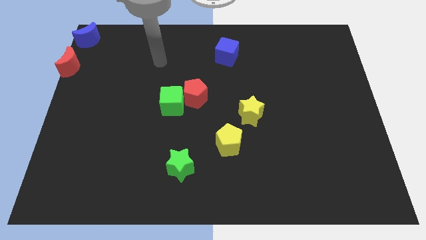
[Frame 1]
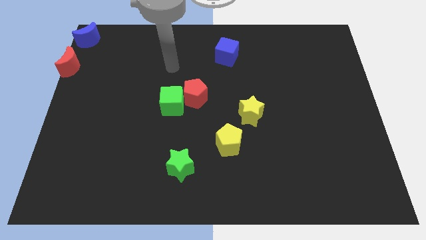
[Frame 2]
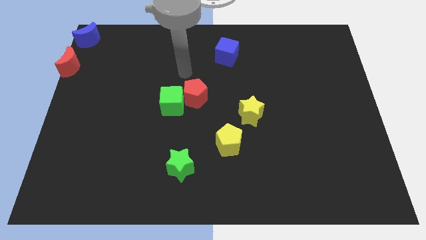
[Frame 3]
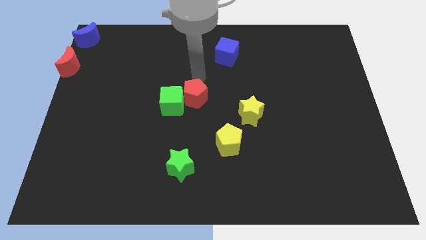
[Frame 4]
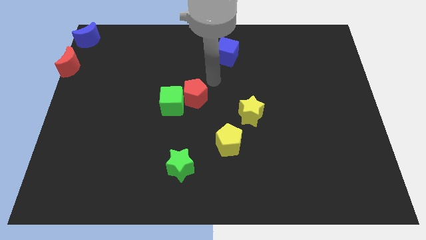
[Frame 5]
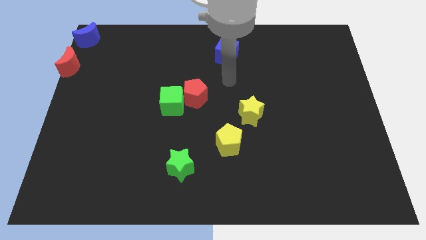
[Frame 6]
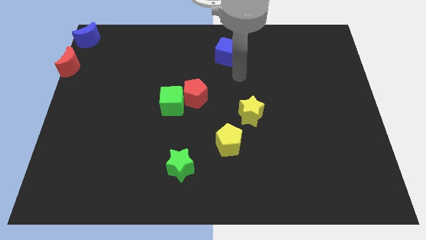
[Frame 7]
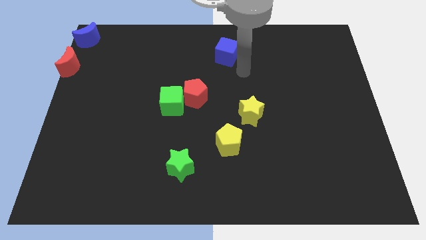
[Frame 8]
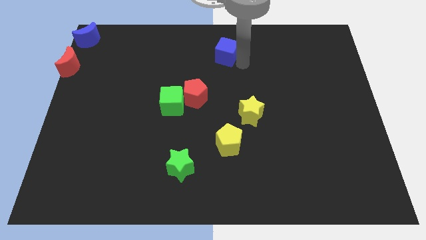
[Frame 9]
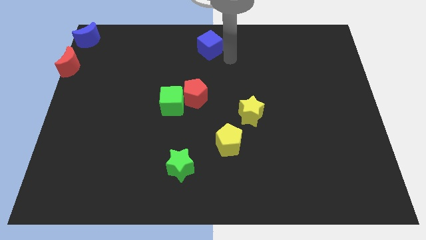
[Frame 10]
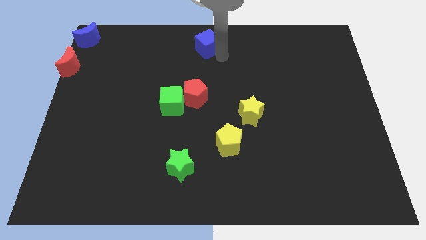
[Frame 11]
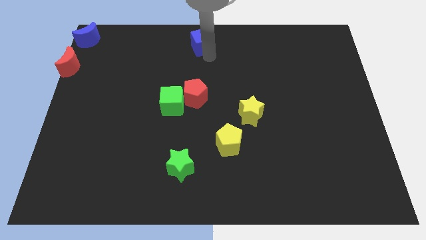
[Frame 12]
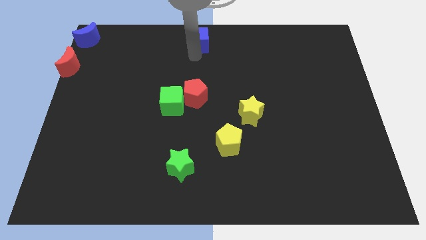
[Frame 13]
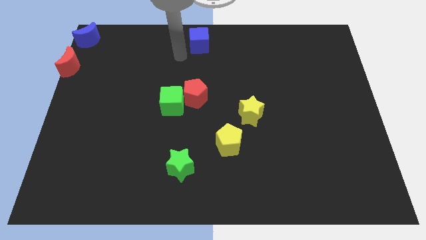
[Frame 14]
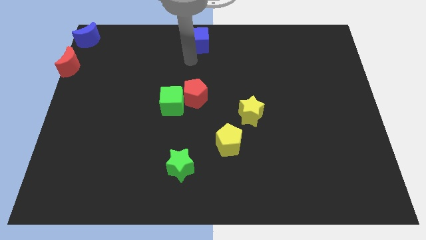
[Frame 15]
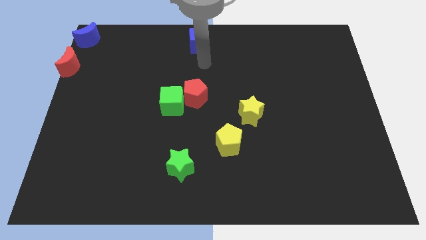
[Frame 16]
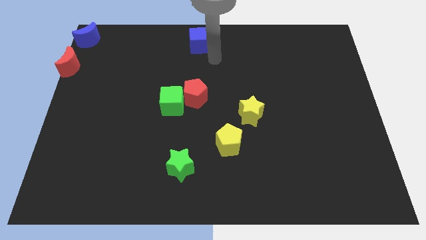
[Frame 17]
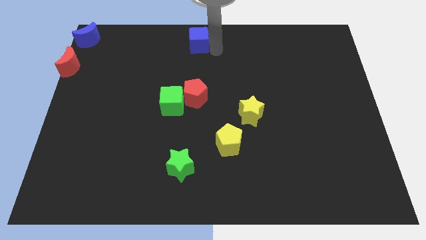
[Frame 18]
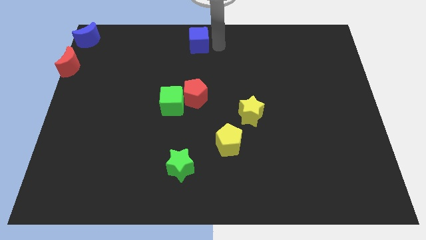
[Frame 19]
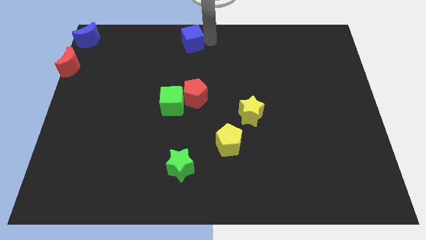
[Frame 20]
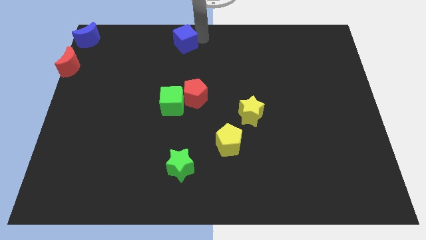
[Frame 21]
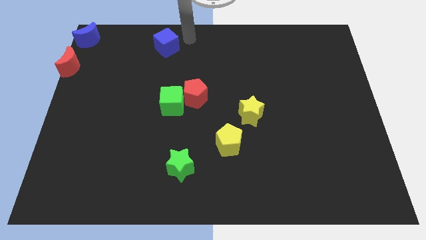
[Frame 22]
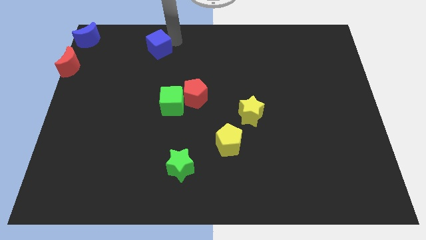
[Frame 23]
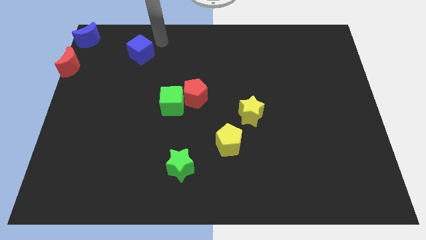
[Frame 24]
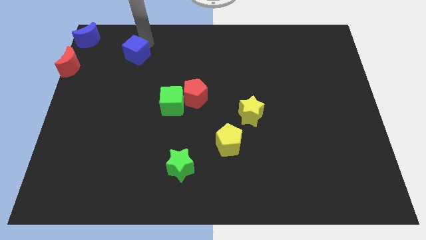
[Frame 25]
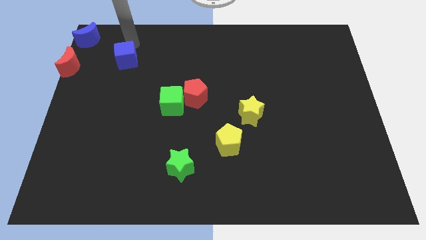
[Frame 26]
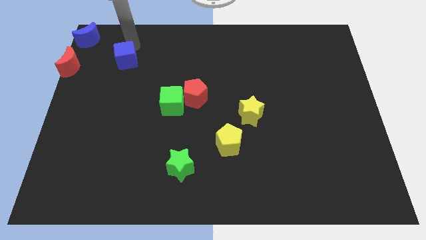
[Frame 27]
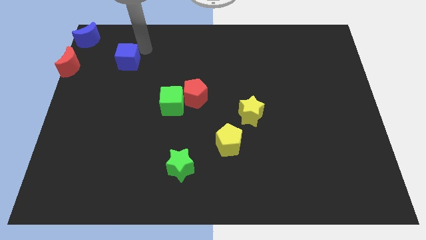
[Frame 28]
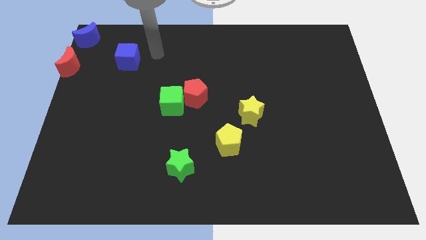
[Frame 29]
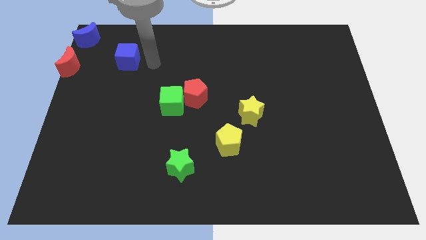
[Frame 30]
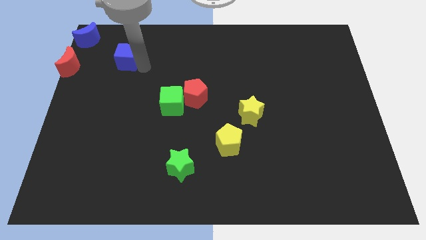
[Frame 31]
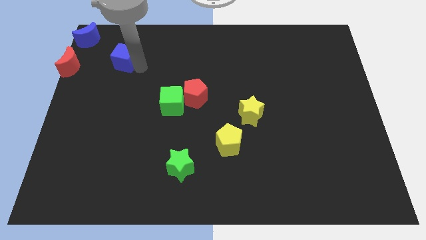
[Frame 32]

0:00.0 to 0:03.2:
move the blue cube to the right of the red moon

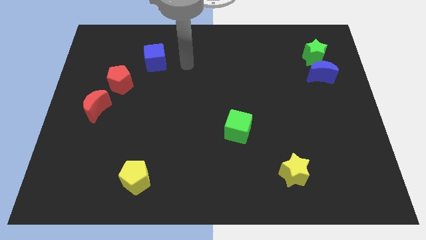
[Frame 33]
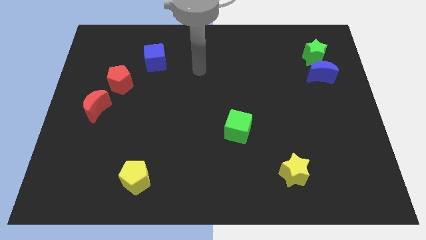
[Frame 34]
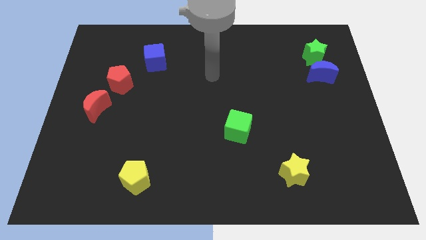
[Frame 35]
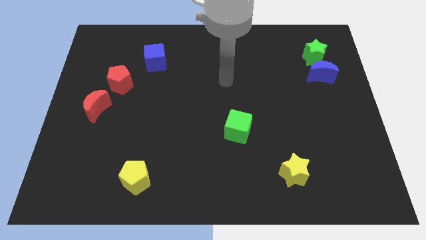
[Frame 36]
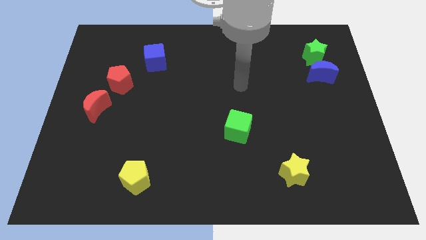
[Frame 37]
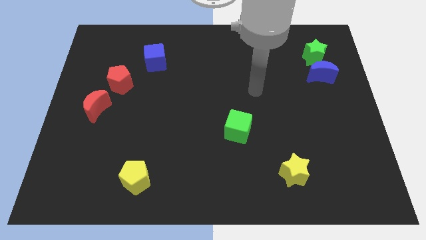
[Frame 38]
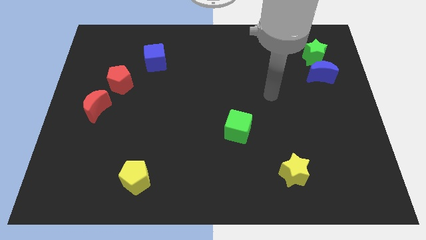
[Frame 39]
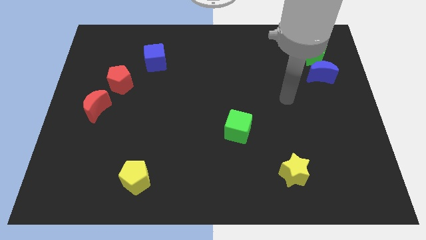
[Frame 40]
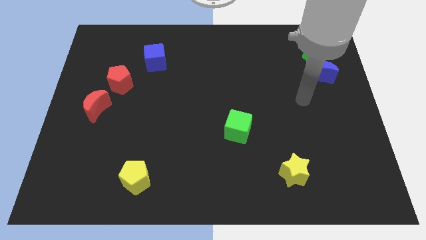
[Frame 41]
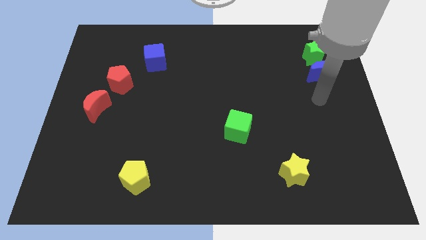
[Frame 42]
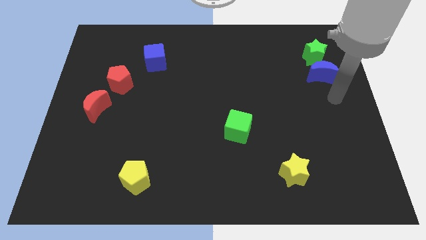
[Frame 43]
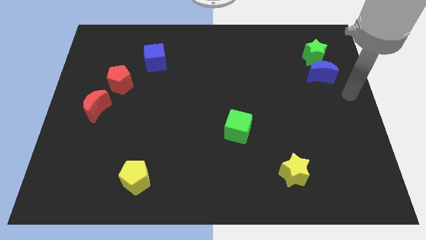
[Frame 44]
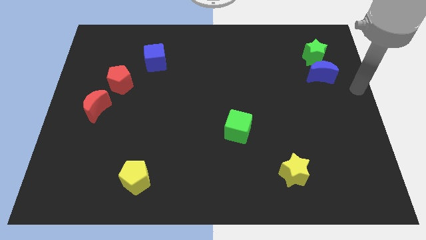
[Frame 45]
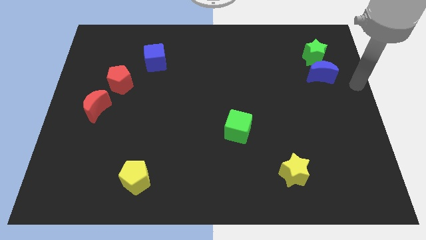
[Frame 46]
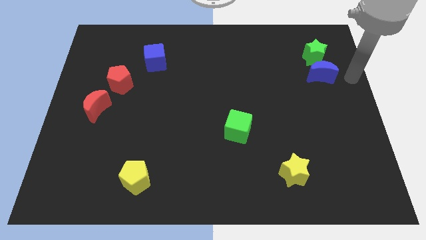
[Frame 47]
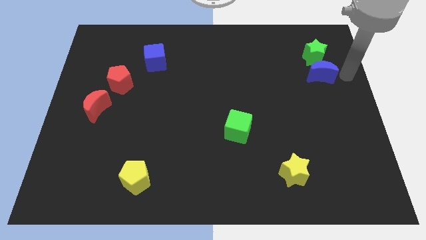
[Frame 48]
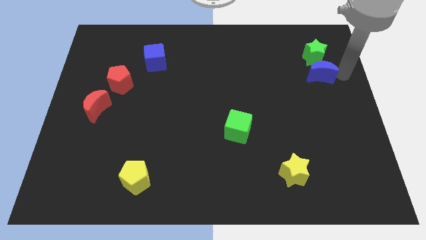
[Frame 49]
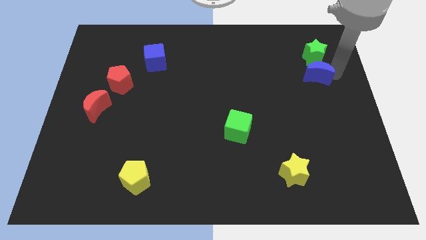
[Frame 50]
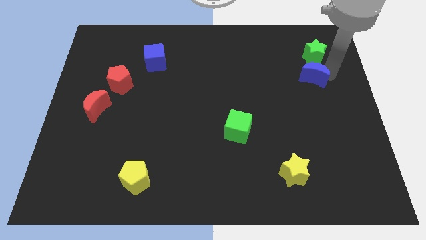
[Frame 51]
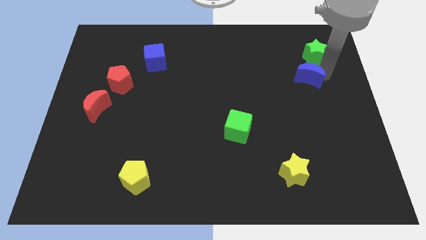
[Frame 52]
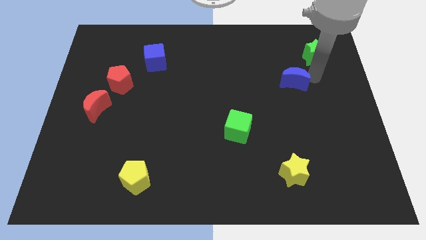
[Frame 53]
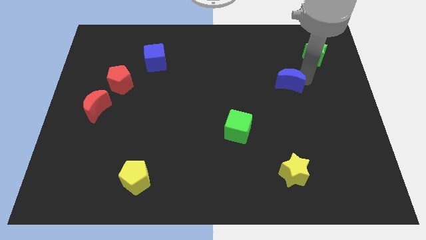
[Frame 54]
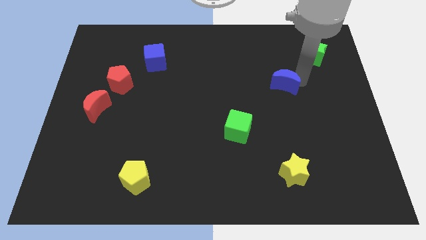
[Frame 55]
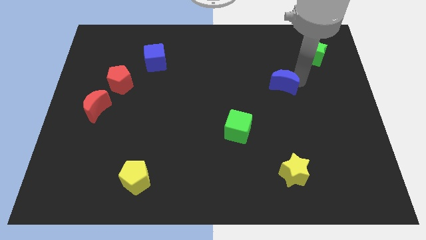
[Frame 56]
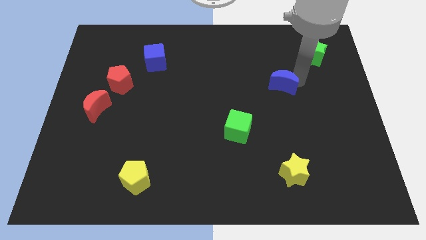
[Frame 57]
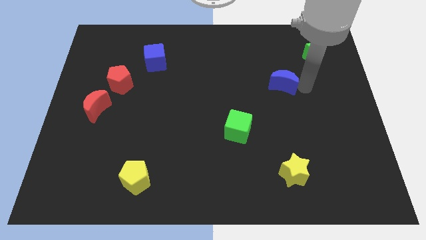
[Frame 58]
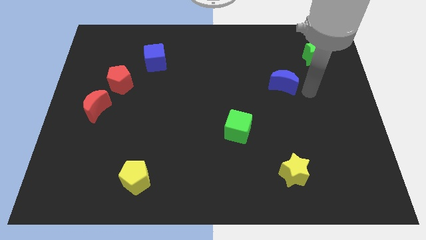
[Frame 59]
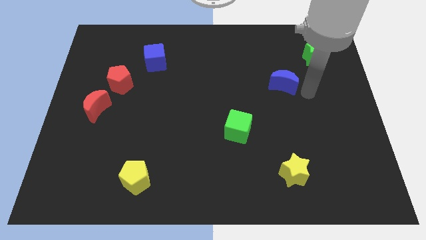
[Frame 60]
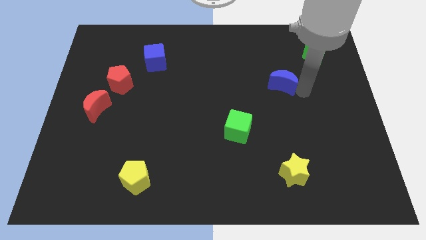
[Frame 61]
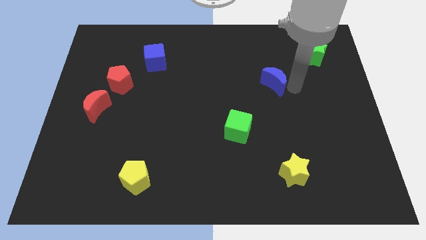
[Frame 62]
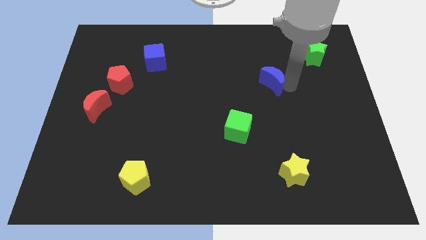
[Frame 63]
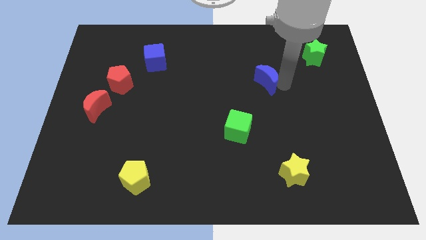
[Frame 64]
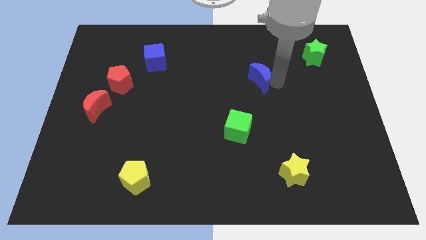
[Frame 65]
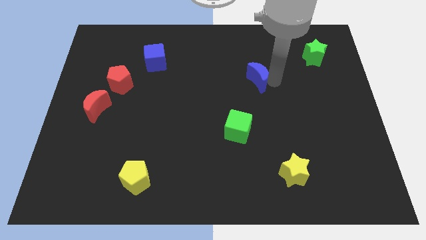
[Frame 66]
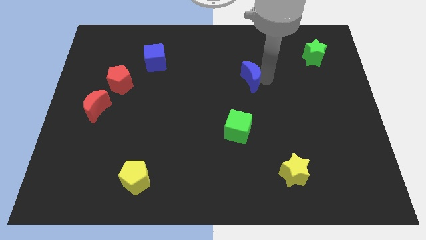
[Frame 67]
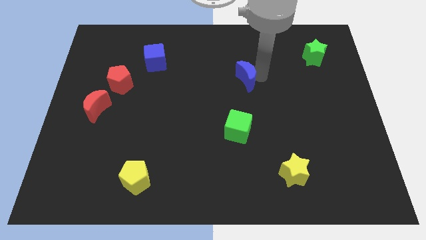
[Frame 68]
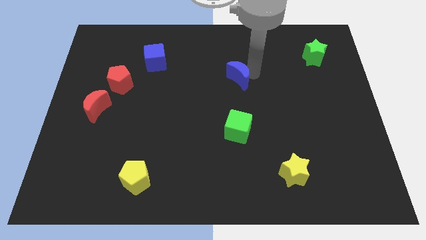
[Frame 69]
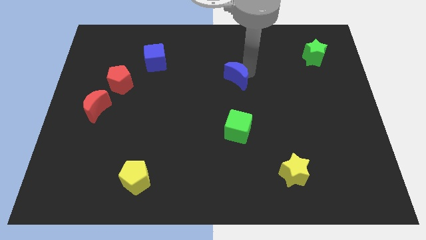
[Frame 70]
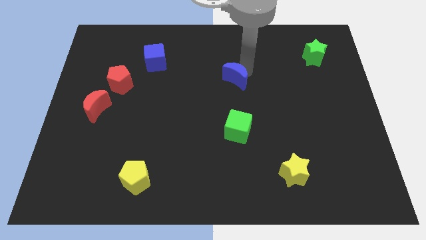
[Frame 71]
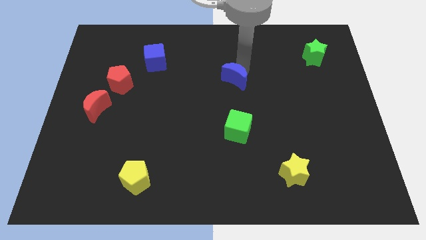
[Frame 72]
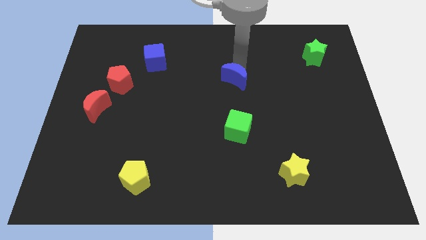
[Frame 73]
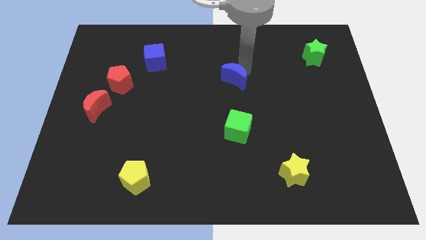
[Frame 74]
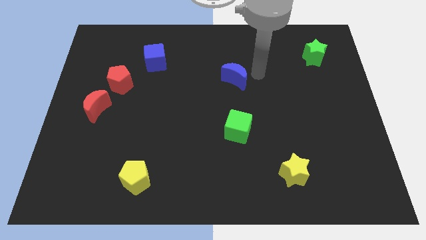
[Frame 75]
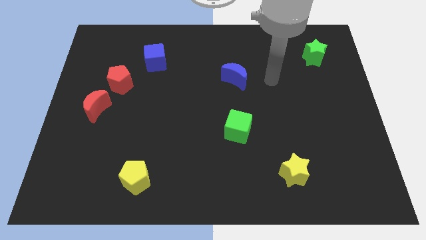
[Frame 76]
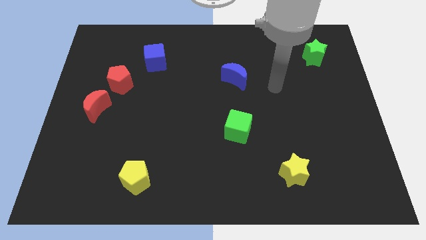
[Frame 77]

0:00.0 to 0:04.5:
push blue crescent away from green star

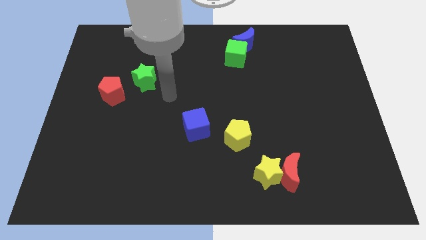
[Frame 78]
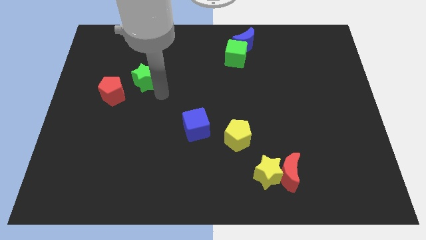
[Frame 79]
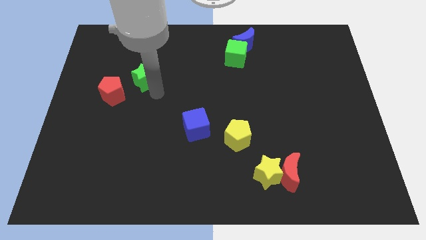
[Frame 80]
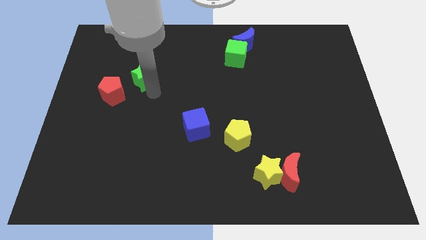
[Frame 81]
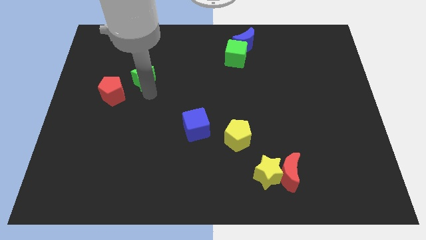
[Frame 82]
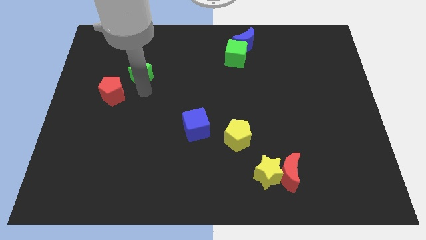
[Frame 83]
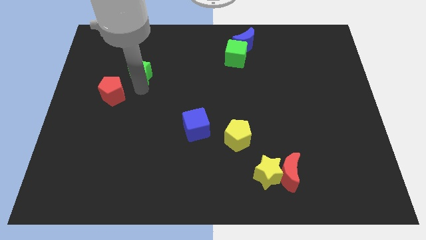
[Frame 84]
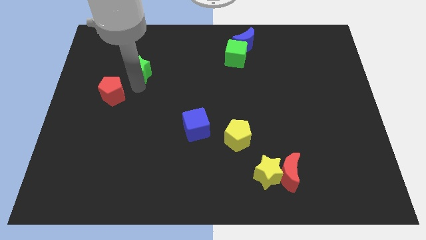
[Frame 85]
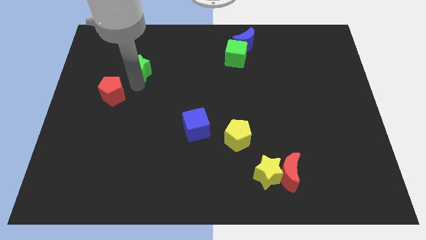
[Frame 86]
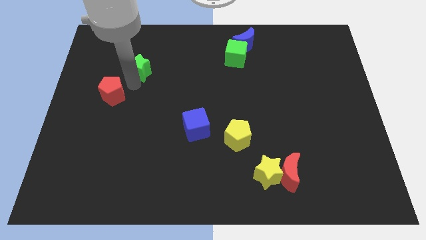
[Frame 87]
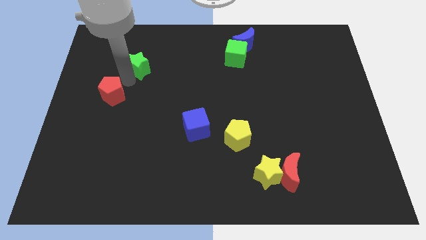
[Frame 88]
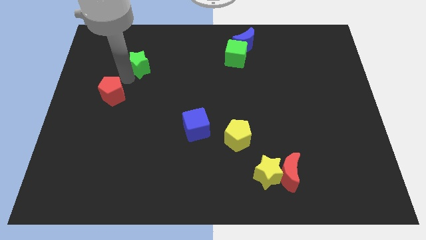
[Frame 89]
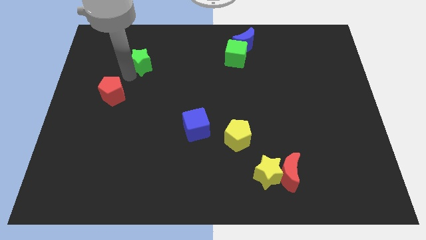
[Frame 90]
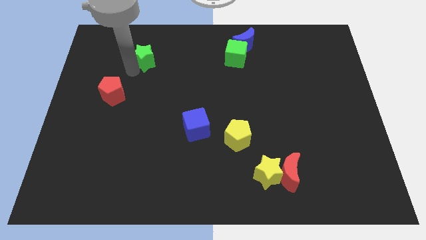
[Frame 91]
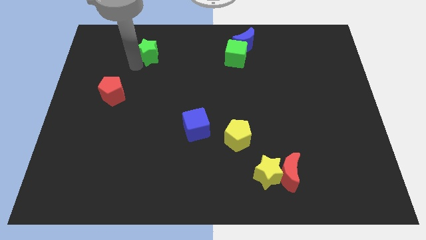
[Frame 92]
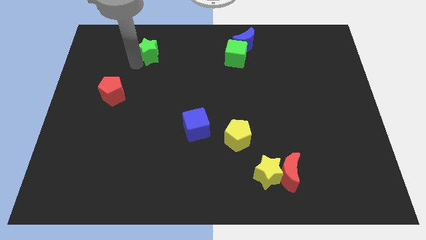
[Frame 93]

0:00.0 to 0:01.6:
push the green star towards the top side of the board
